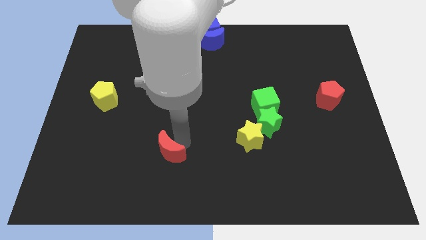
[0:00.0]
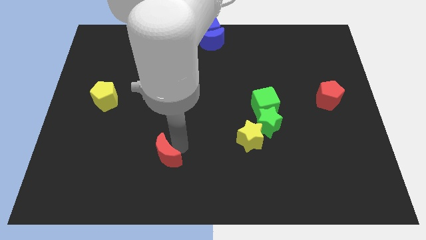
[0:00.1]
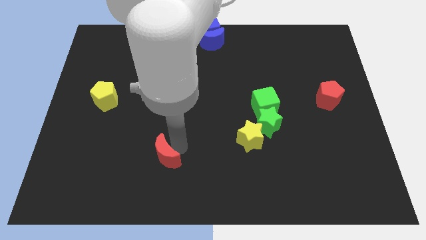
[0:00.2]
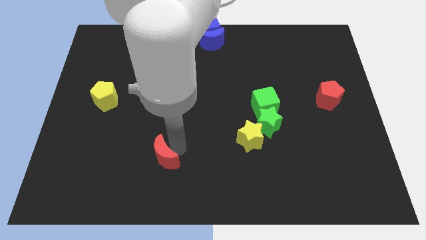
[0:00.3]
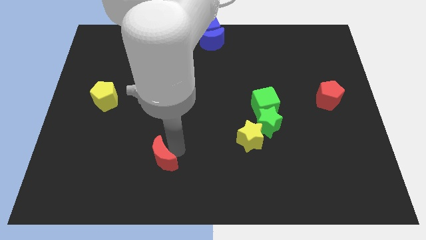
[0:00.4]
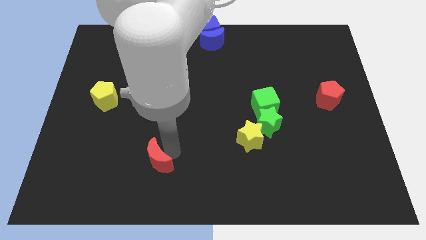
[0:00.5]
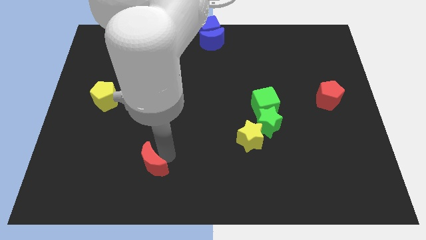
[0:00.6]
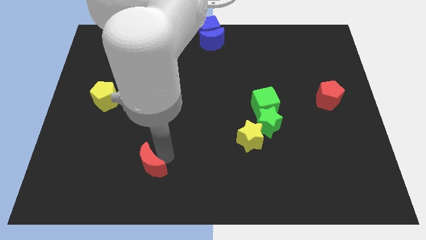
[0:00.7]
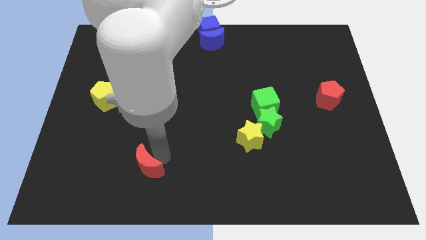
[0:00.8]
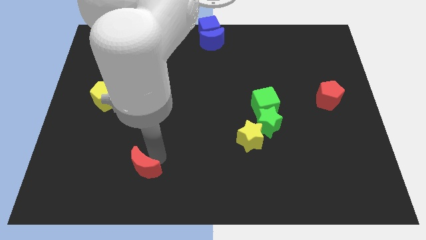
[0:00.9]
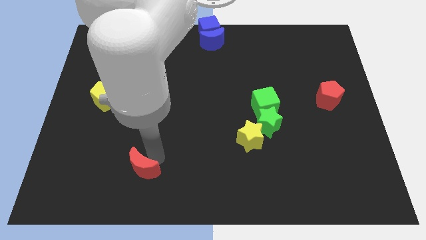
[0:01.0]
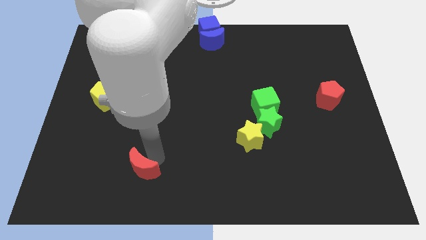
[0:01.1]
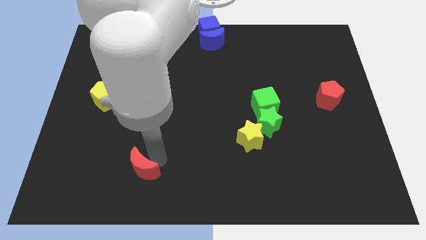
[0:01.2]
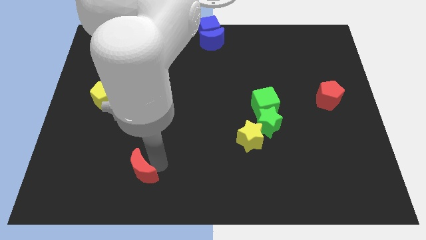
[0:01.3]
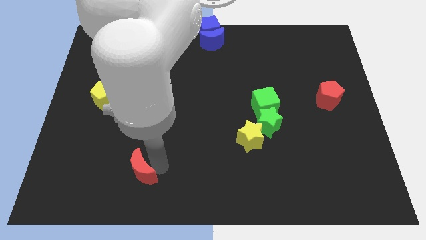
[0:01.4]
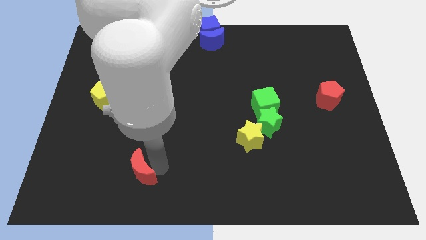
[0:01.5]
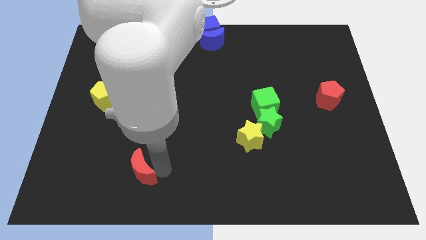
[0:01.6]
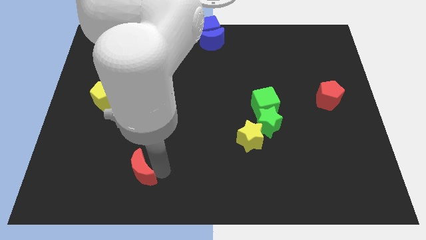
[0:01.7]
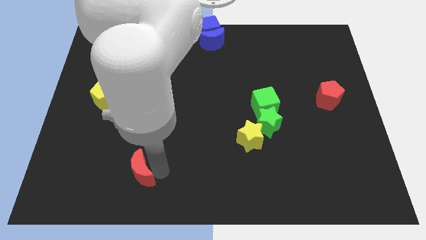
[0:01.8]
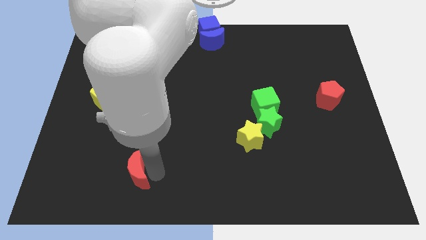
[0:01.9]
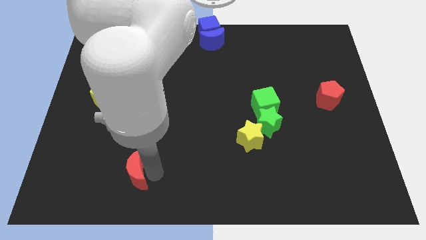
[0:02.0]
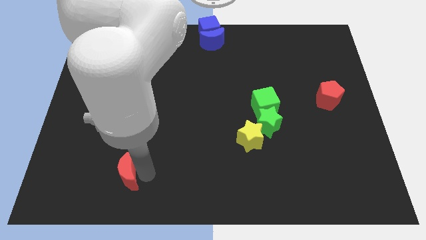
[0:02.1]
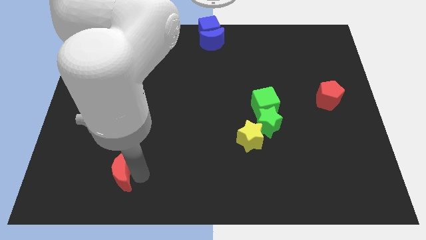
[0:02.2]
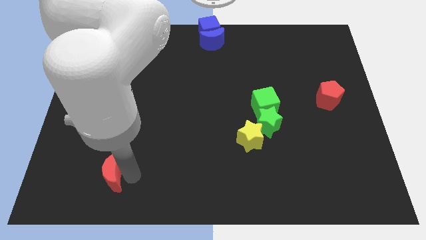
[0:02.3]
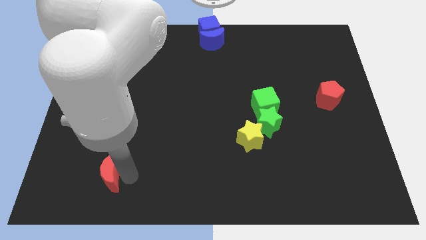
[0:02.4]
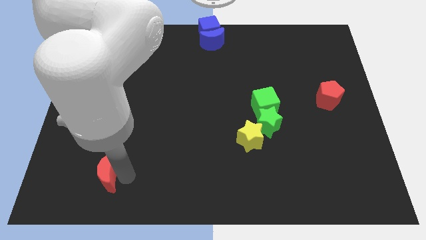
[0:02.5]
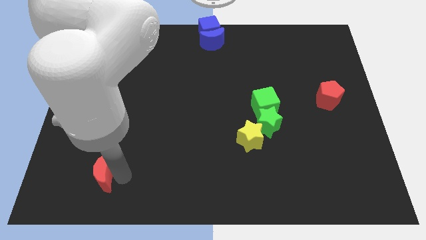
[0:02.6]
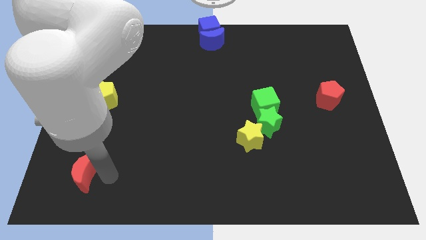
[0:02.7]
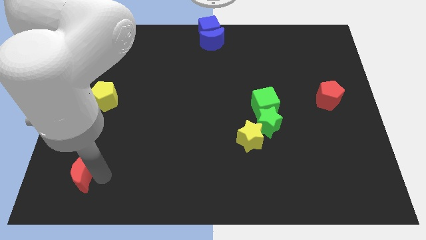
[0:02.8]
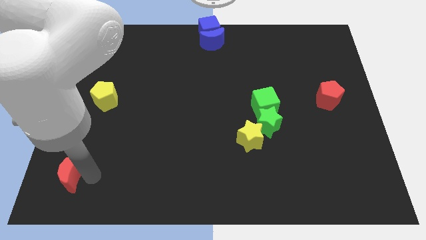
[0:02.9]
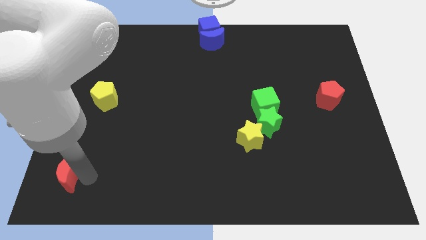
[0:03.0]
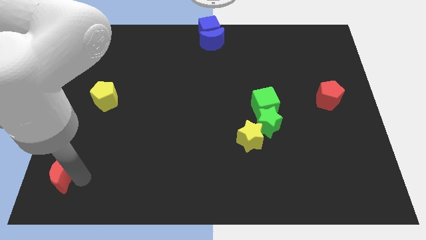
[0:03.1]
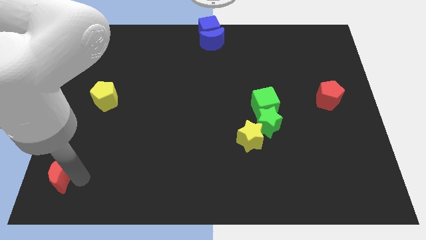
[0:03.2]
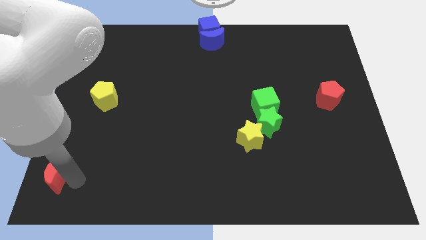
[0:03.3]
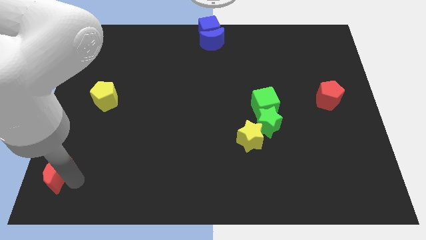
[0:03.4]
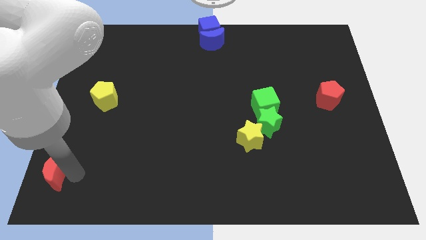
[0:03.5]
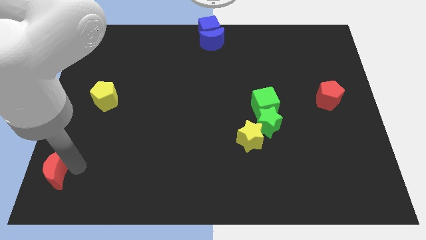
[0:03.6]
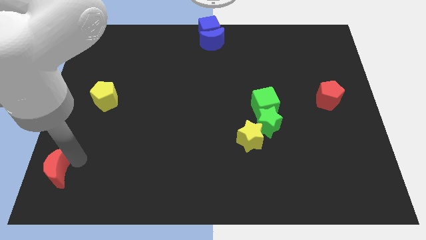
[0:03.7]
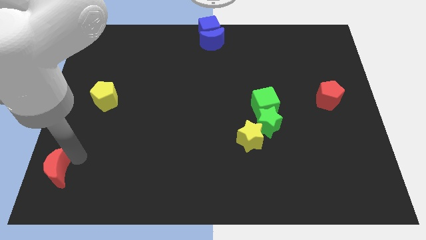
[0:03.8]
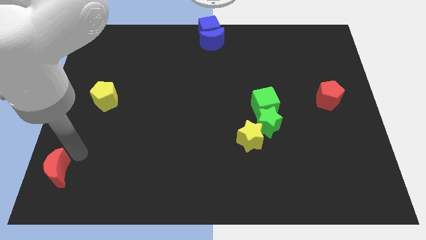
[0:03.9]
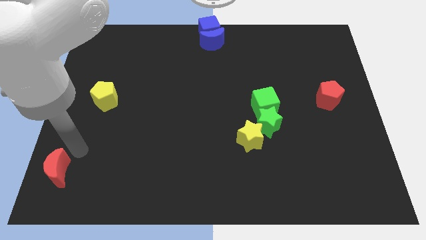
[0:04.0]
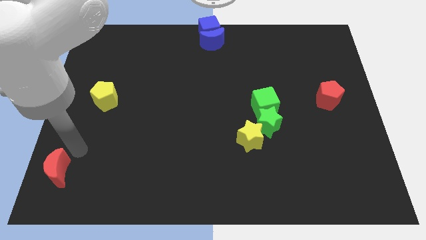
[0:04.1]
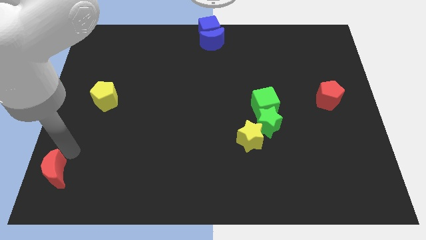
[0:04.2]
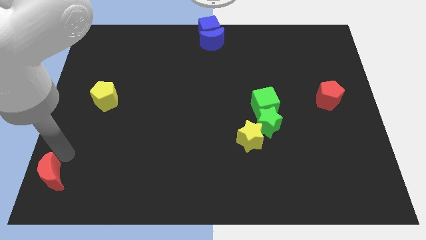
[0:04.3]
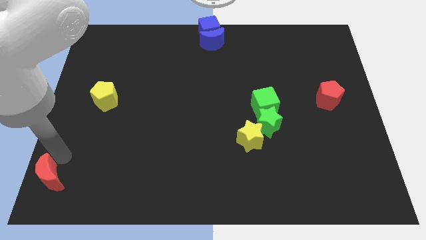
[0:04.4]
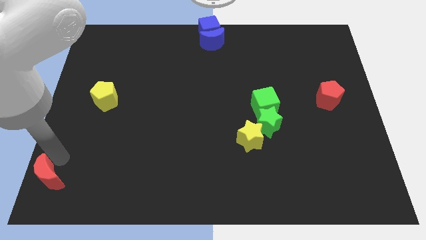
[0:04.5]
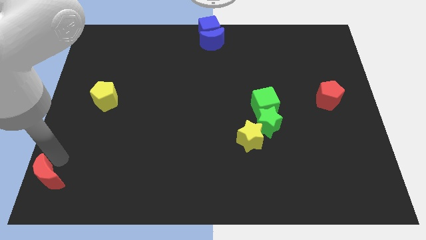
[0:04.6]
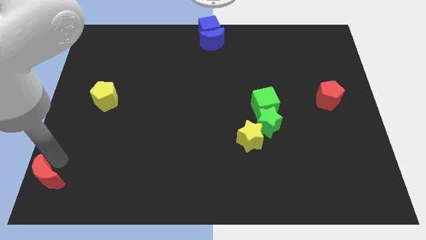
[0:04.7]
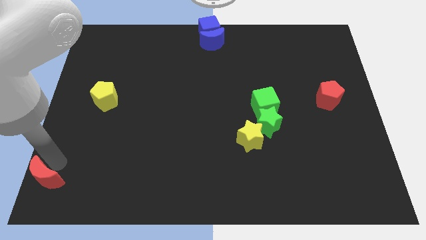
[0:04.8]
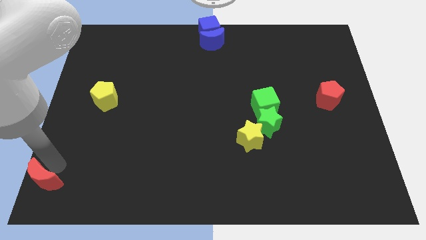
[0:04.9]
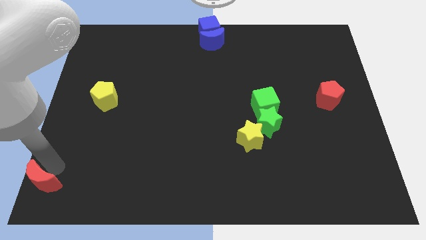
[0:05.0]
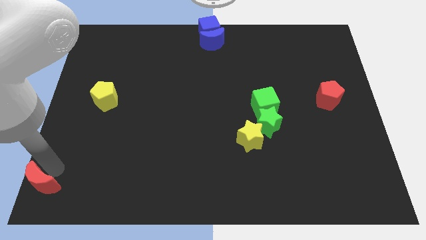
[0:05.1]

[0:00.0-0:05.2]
move the red crescent to the bottom left corner

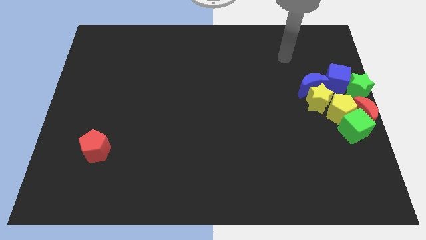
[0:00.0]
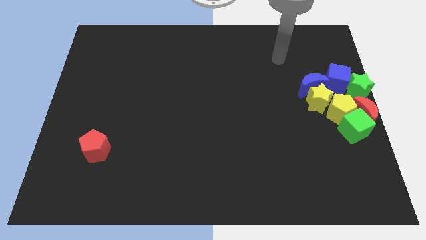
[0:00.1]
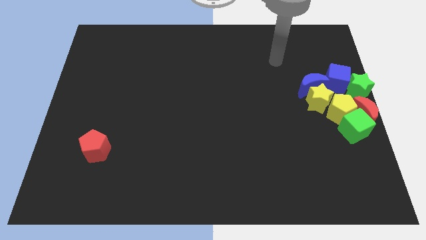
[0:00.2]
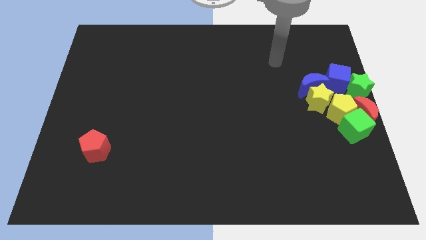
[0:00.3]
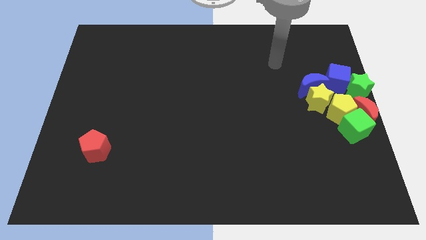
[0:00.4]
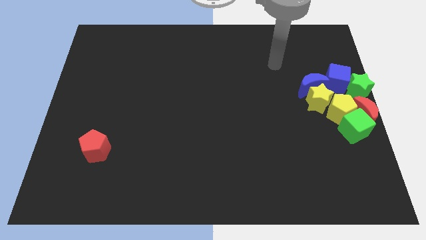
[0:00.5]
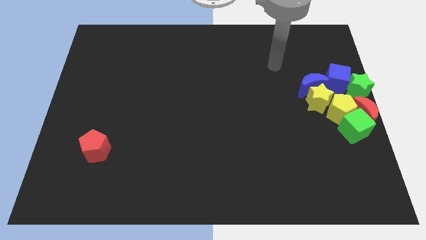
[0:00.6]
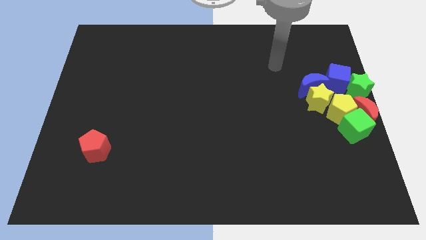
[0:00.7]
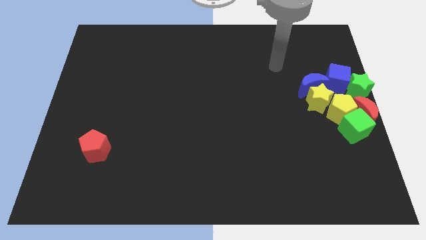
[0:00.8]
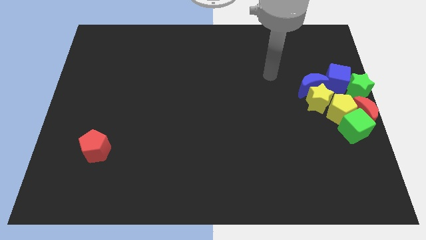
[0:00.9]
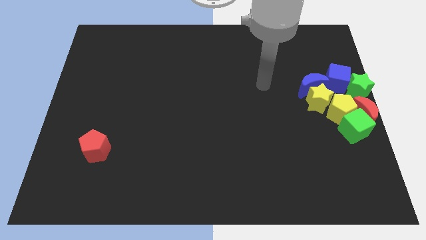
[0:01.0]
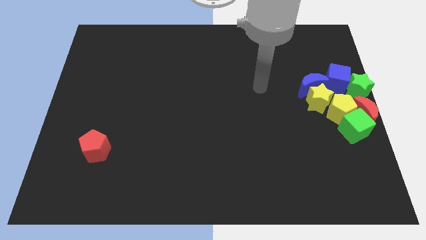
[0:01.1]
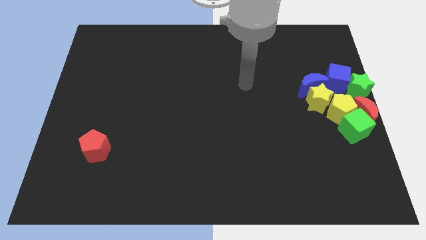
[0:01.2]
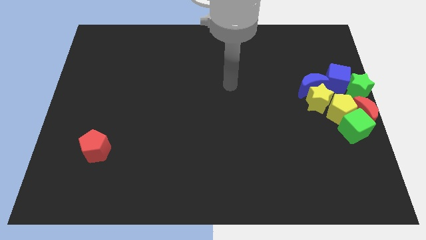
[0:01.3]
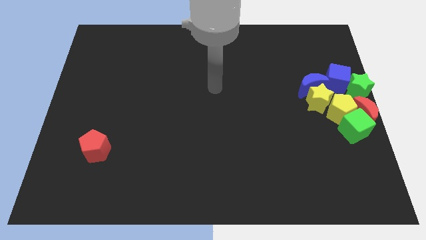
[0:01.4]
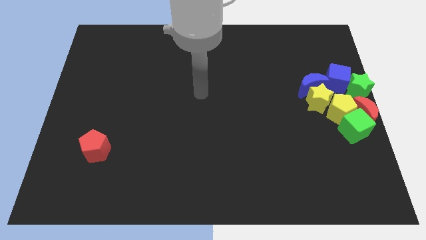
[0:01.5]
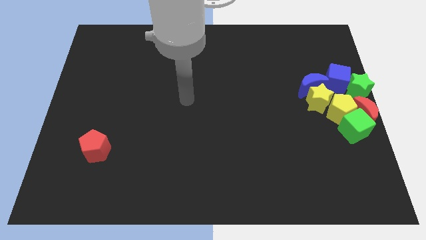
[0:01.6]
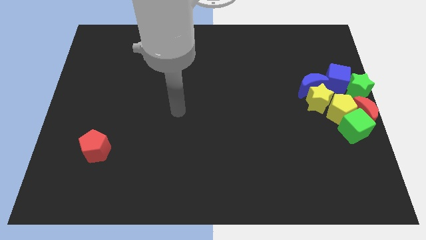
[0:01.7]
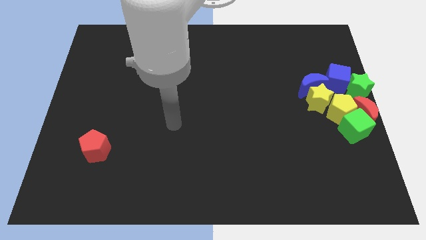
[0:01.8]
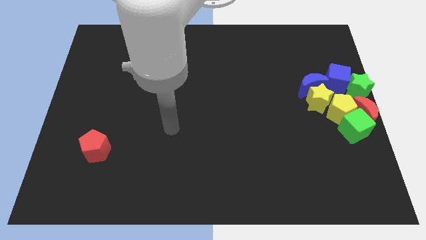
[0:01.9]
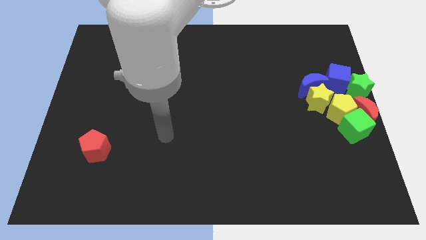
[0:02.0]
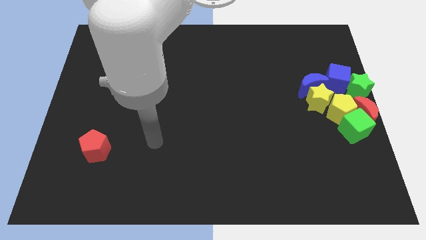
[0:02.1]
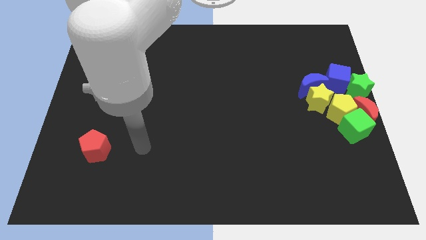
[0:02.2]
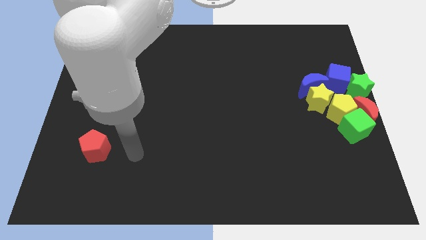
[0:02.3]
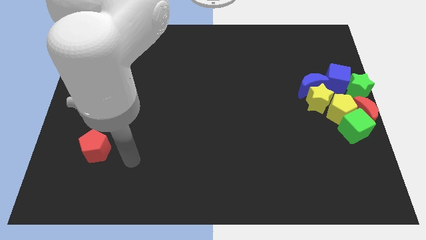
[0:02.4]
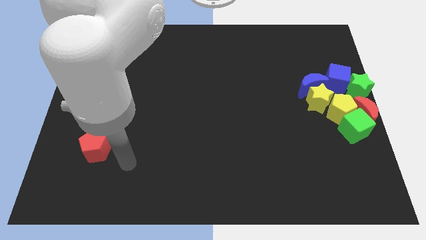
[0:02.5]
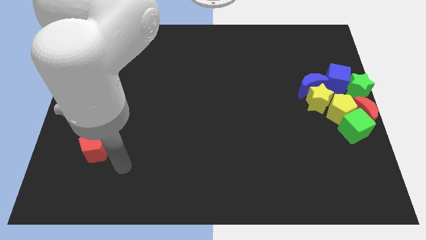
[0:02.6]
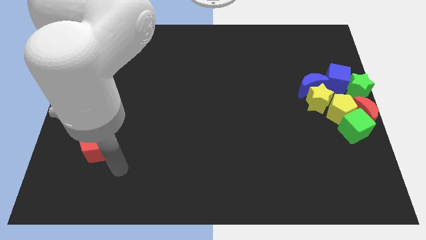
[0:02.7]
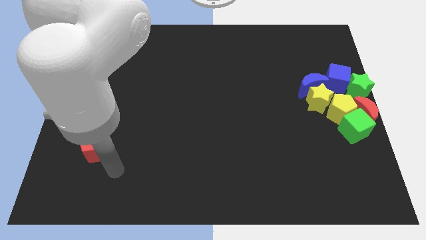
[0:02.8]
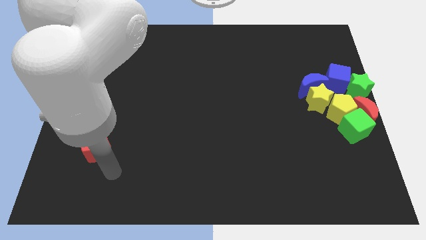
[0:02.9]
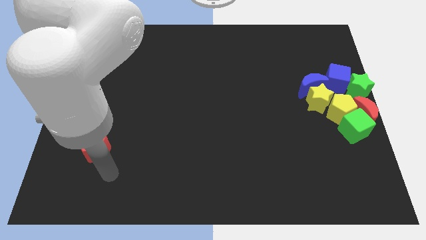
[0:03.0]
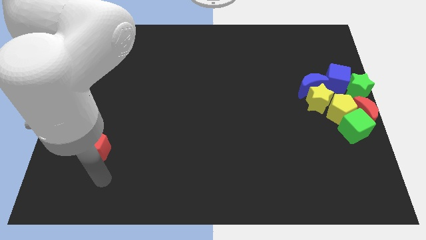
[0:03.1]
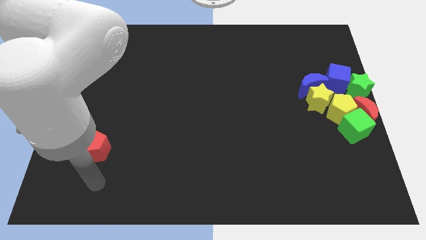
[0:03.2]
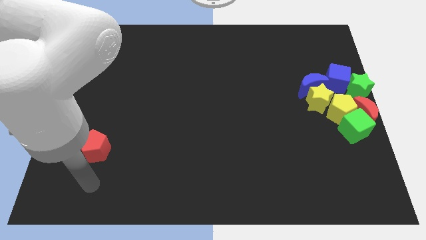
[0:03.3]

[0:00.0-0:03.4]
move your arm at the bottom side of the red pentagon

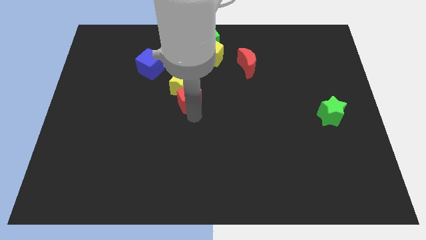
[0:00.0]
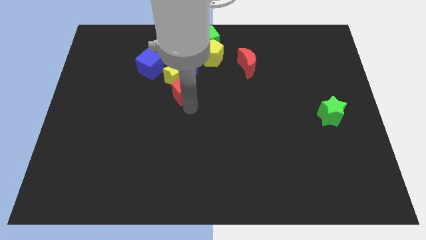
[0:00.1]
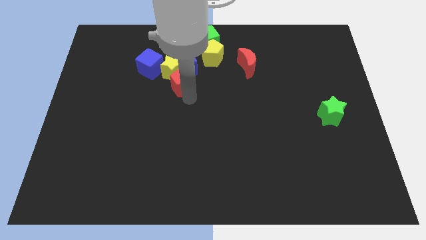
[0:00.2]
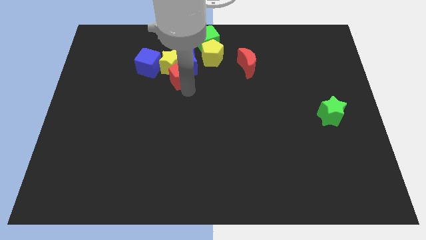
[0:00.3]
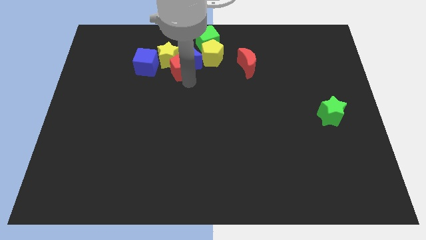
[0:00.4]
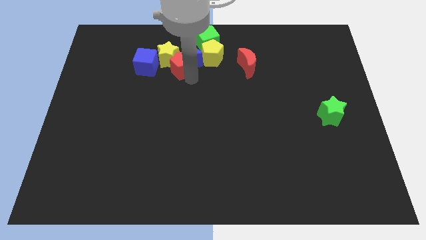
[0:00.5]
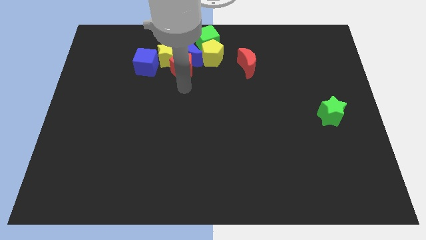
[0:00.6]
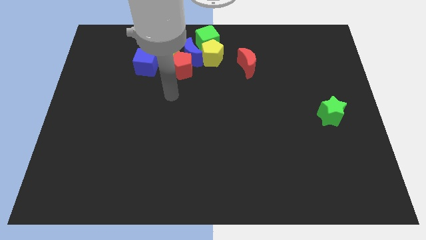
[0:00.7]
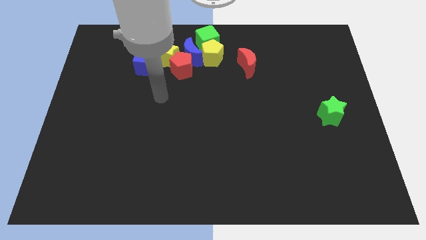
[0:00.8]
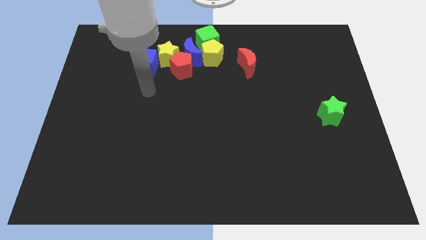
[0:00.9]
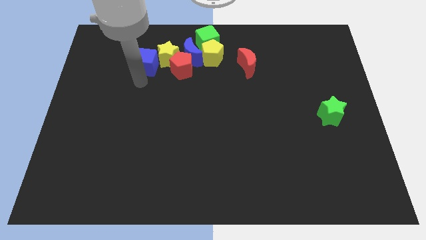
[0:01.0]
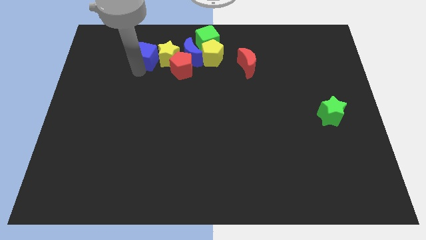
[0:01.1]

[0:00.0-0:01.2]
push the yellow star to the right of the blue cube
